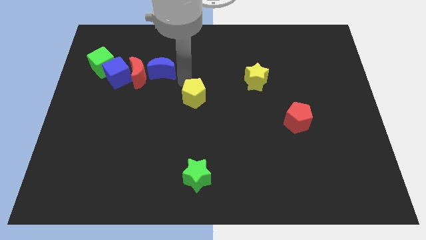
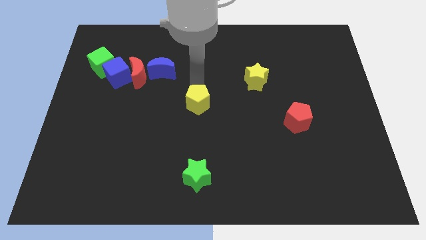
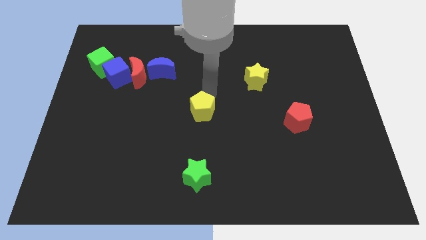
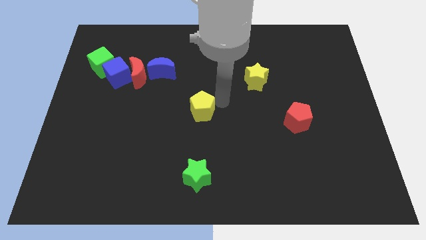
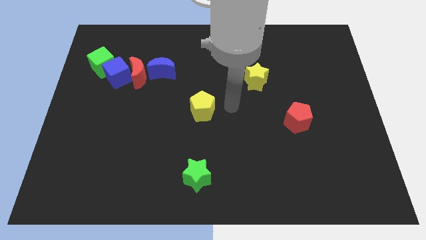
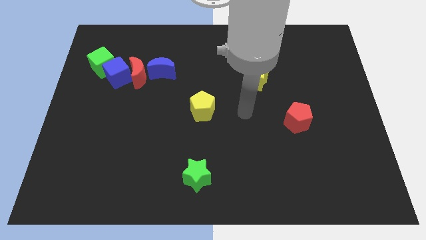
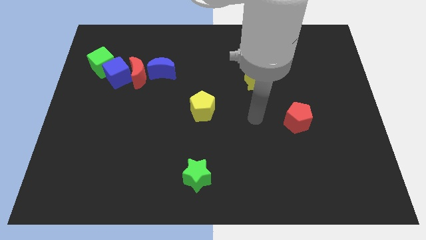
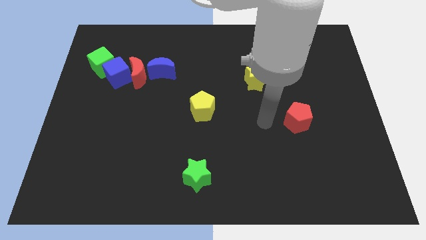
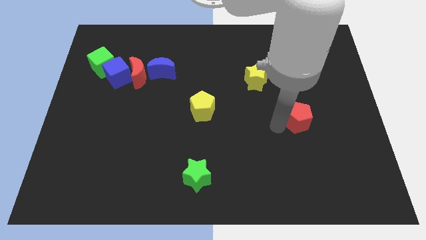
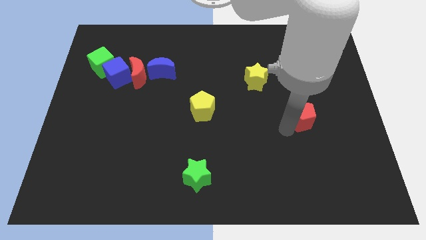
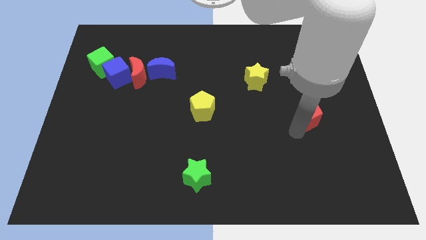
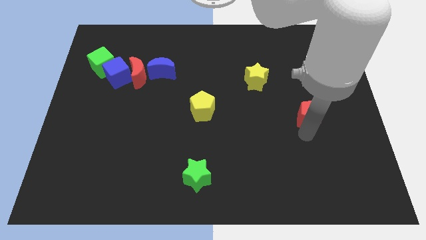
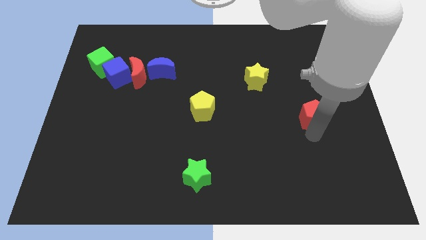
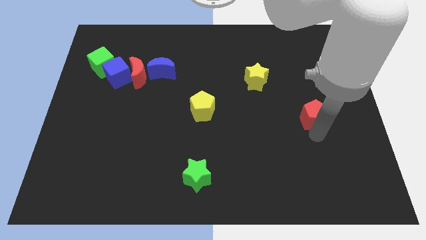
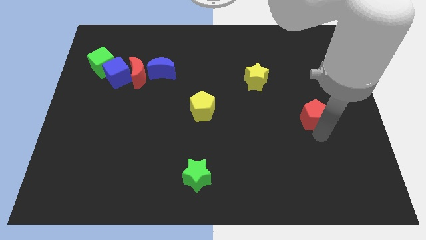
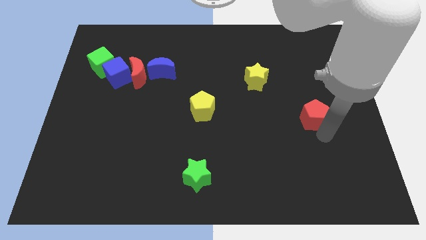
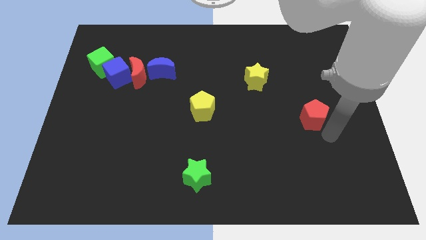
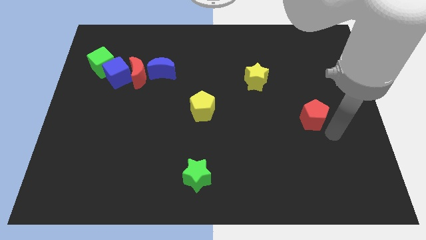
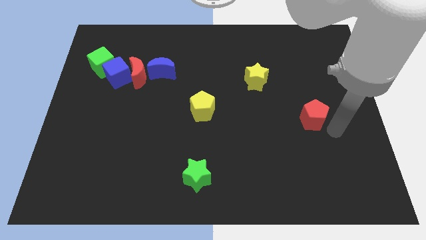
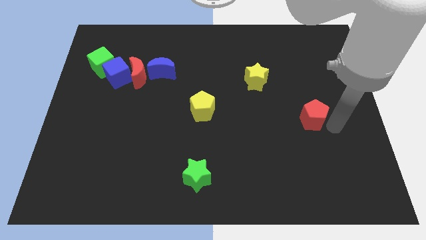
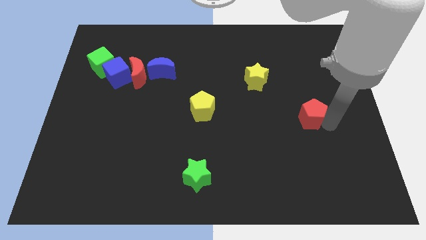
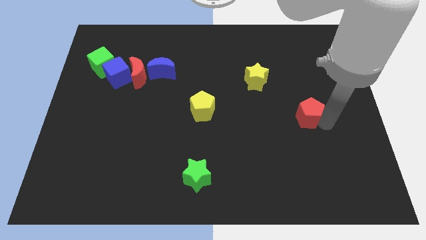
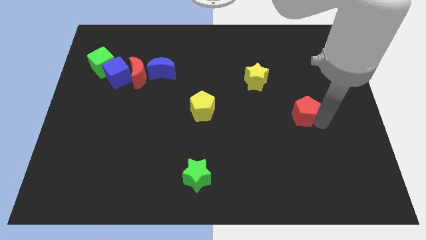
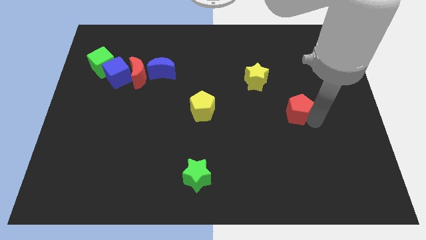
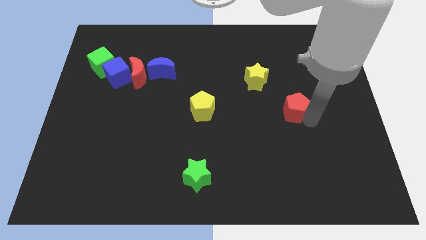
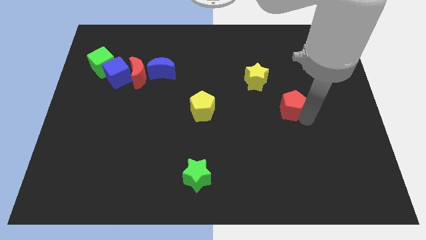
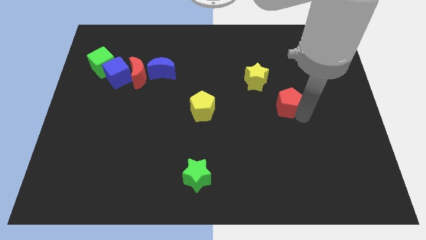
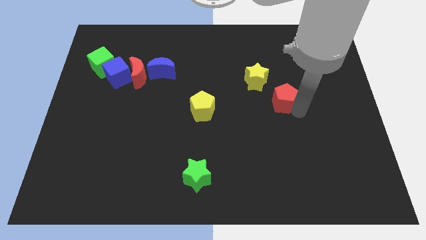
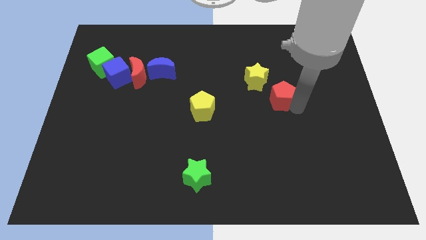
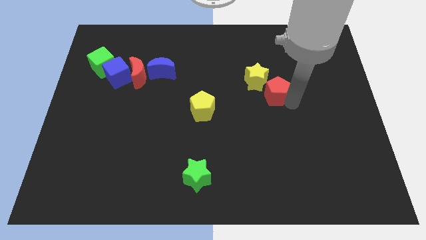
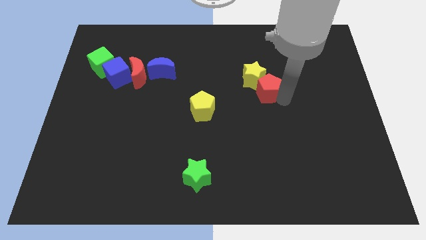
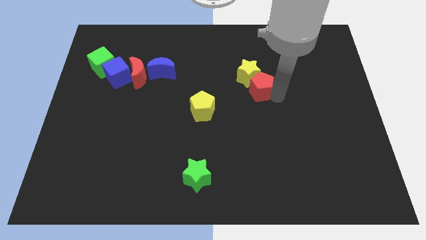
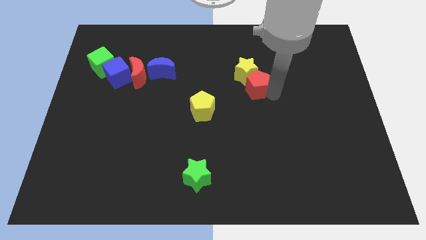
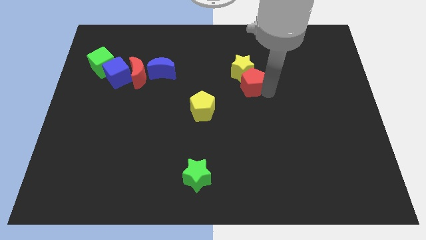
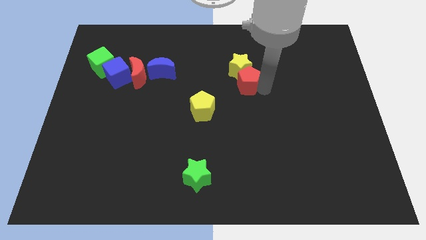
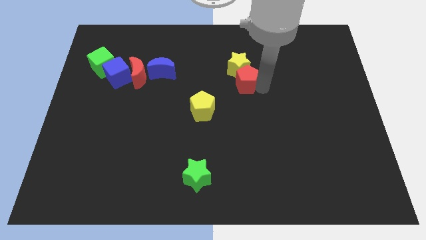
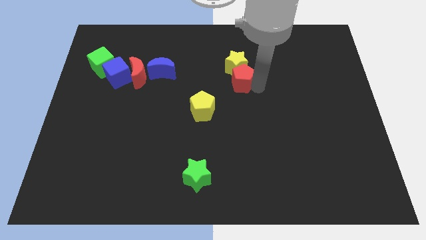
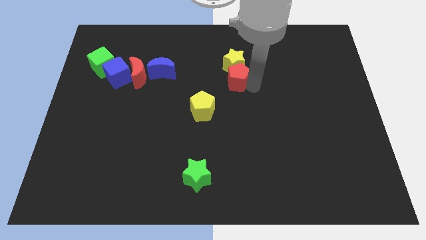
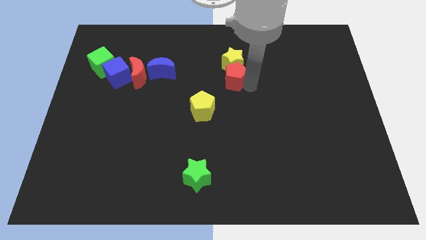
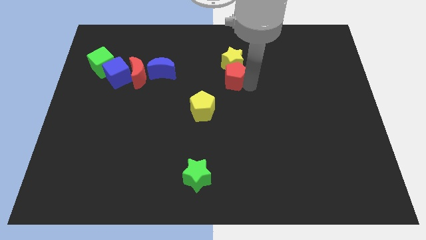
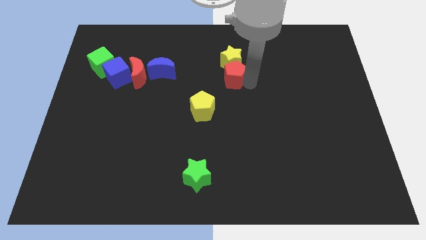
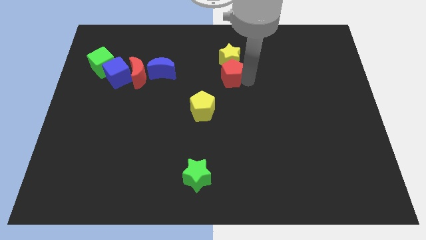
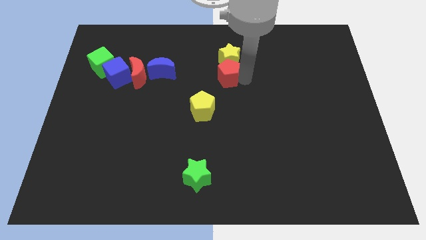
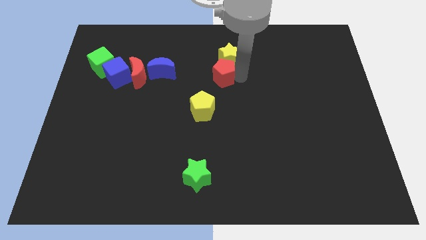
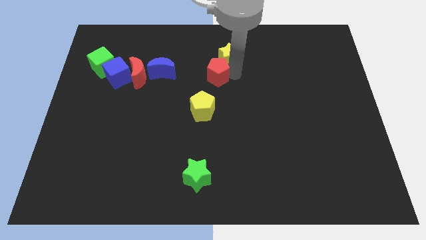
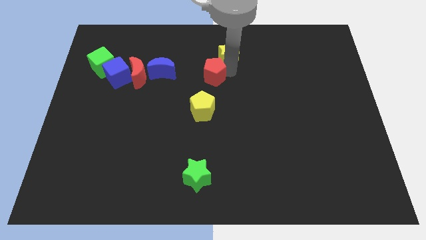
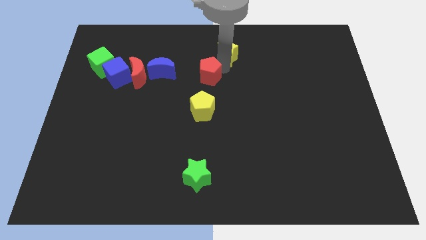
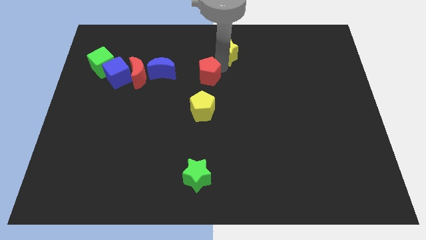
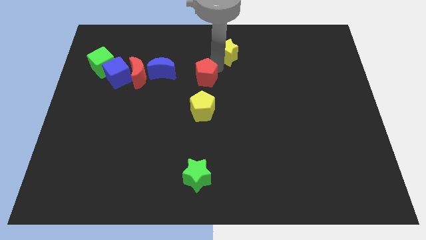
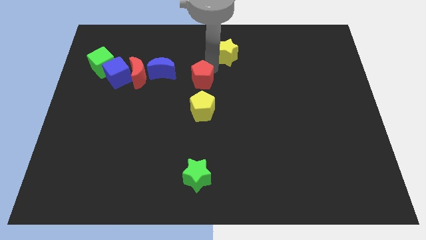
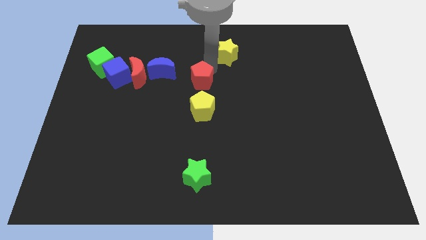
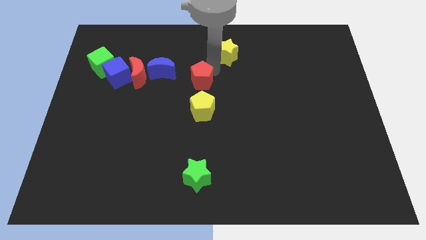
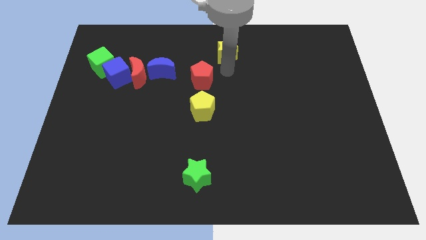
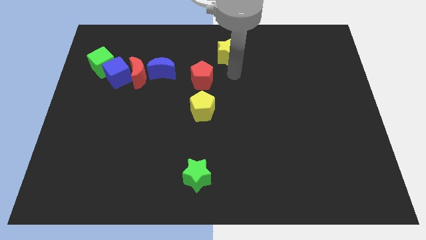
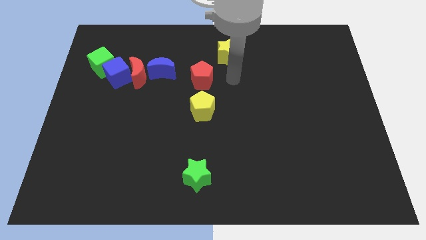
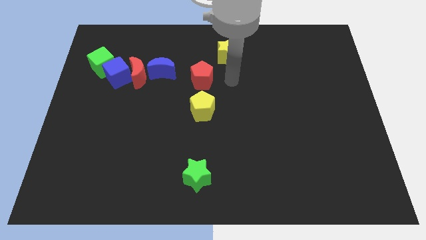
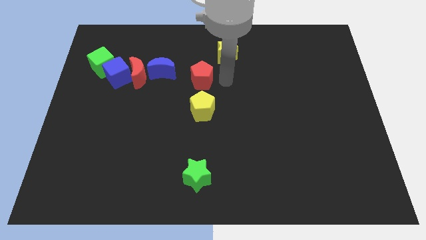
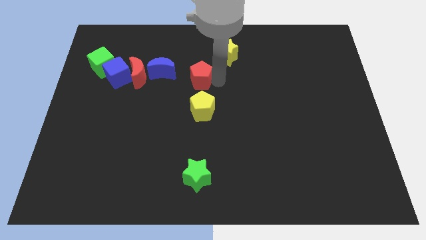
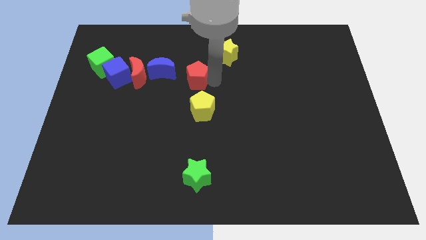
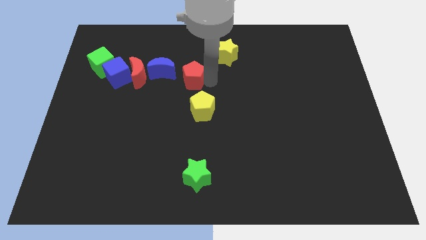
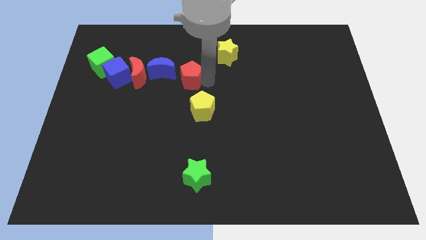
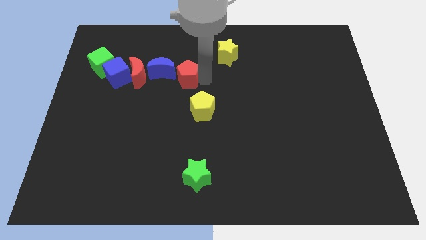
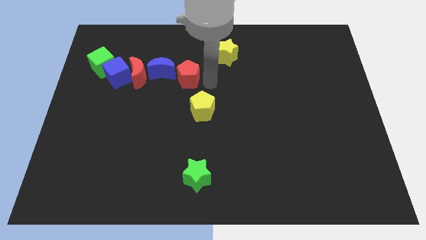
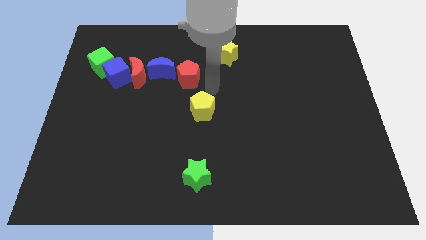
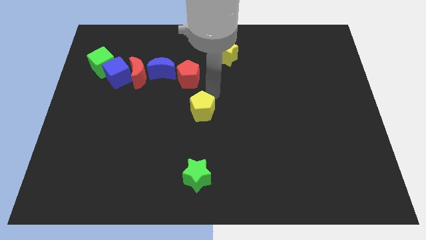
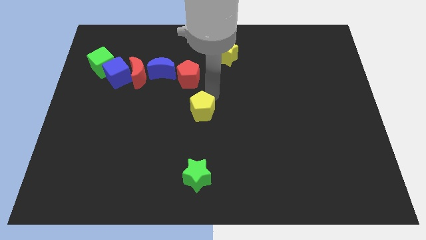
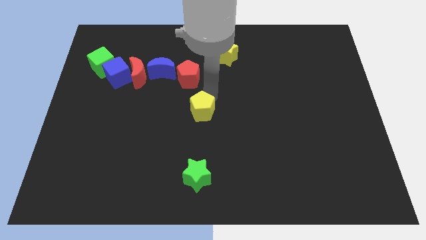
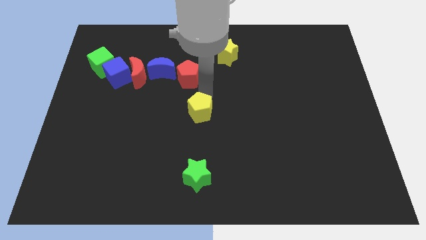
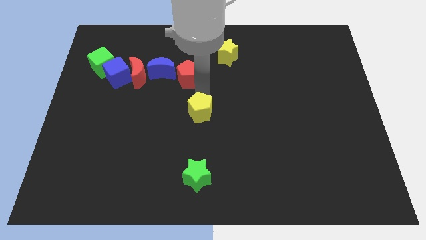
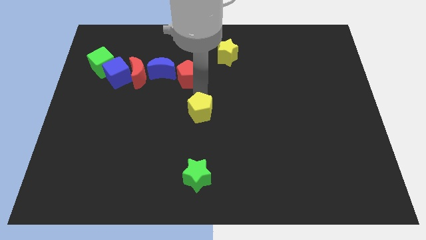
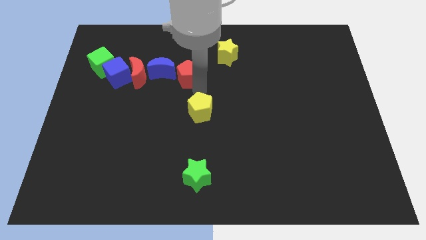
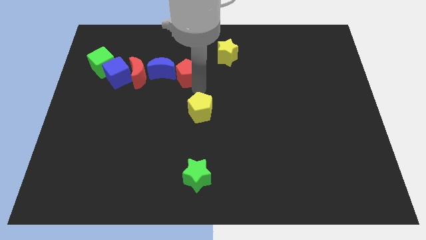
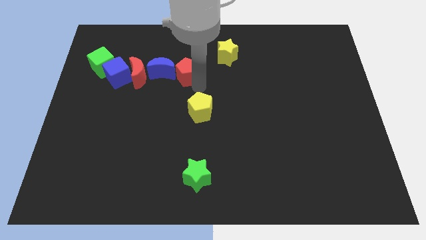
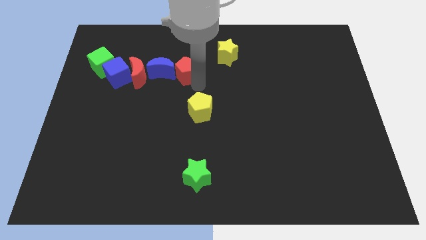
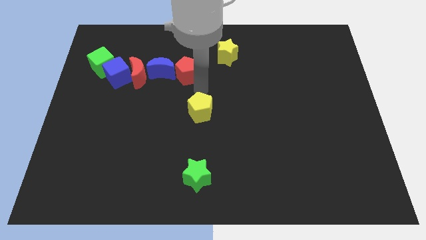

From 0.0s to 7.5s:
place the red pentagon into the blue crescent

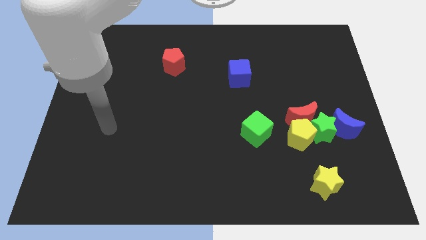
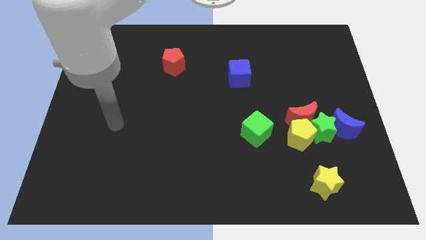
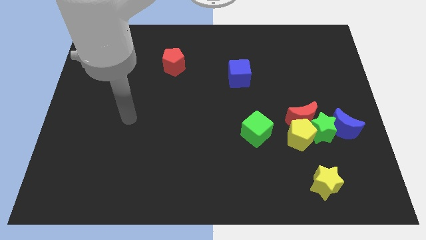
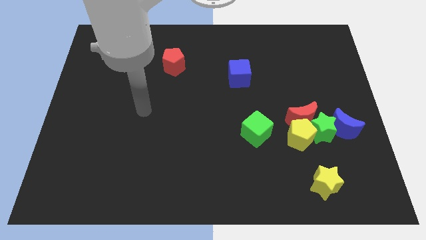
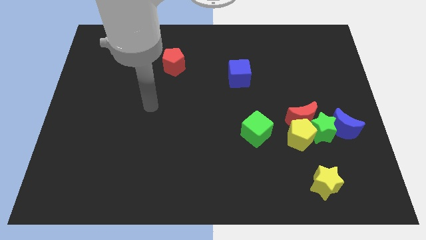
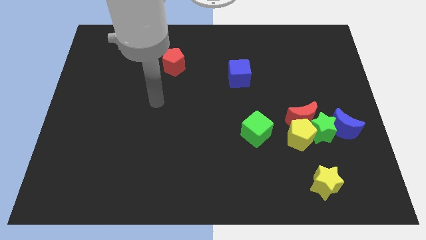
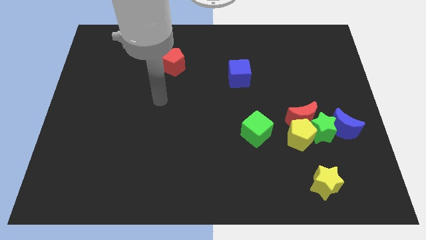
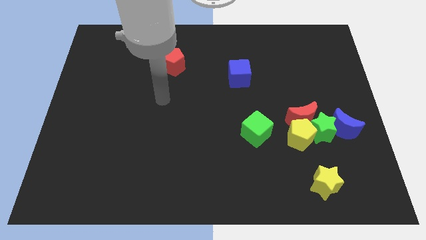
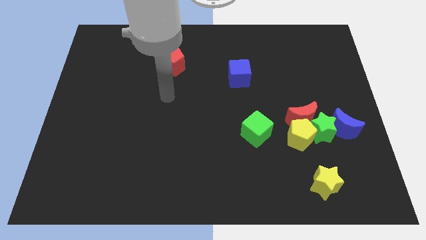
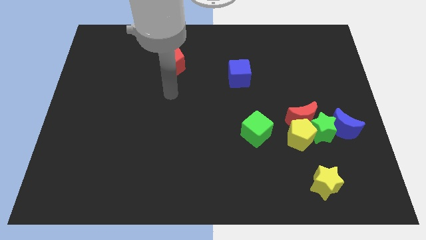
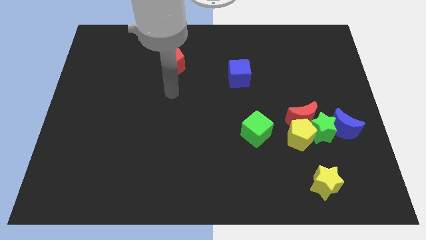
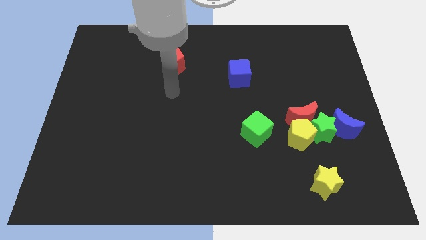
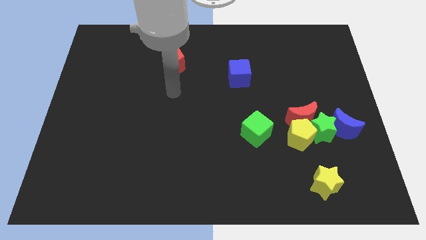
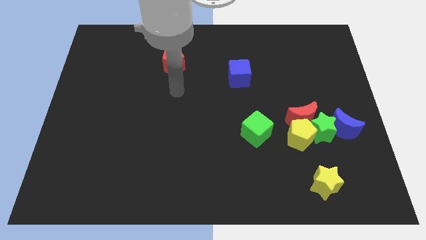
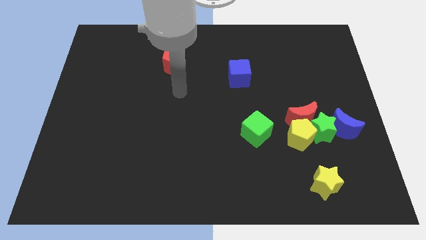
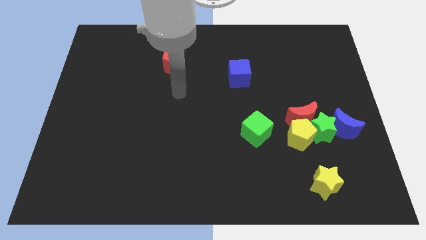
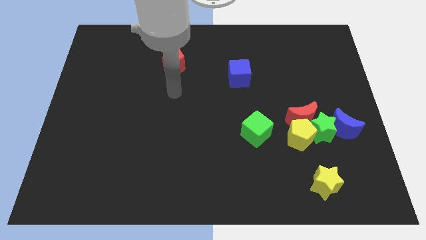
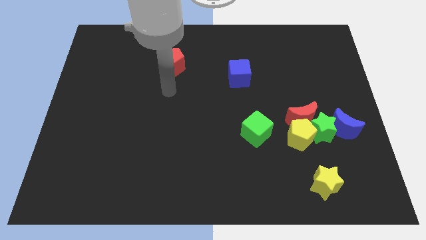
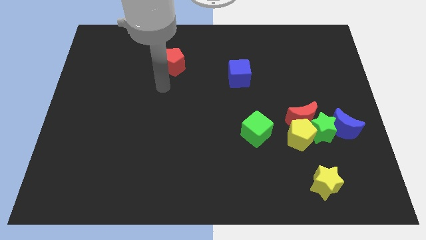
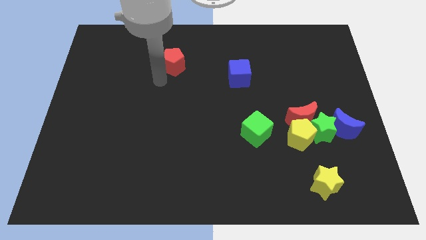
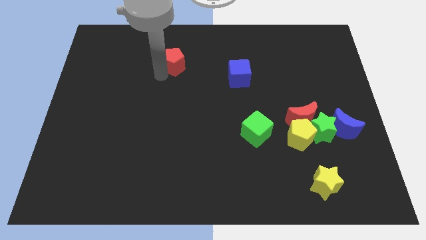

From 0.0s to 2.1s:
move your arm close to the red pentagon
